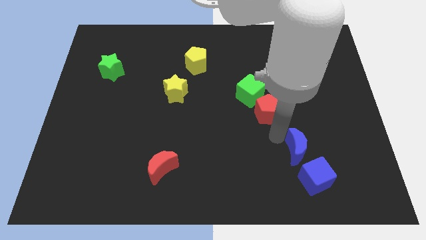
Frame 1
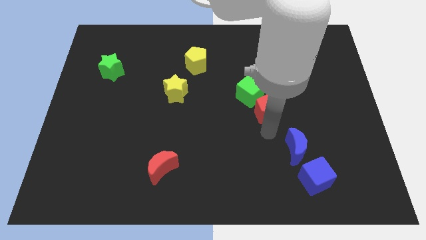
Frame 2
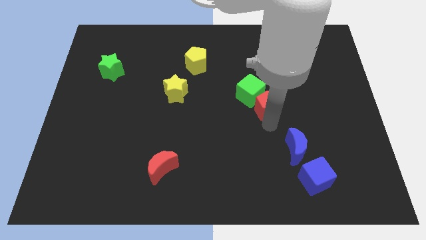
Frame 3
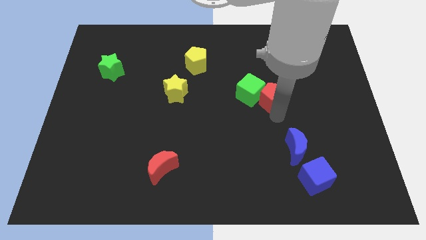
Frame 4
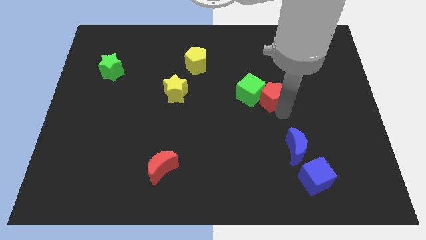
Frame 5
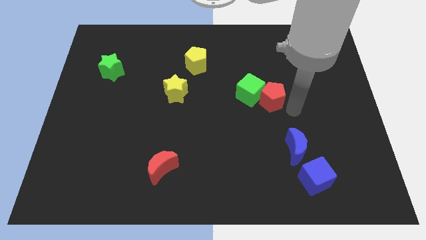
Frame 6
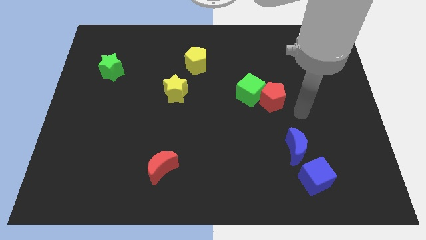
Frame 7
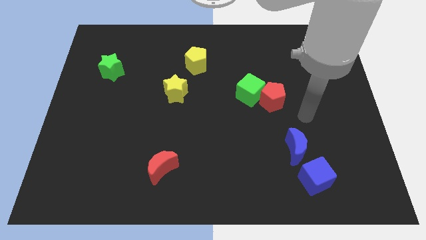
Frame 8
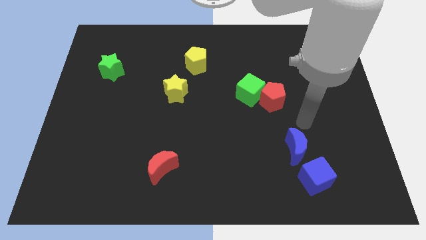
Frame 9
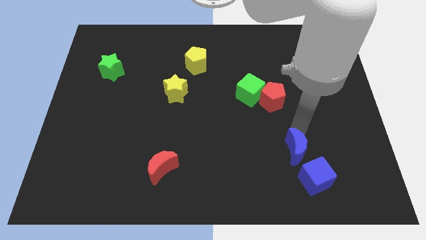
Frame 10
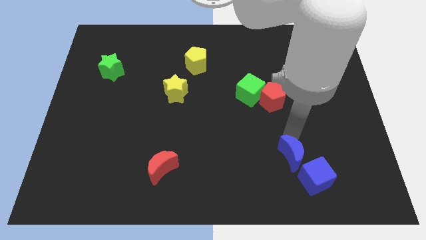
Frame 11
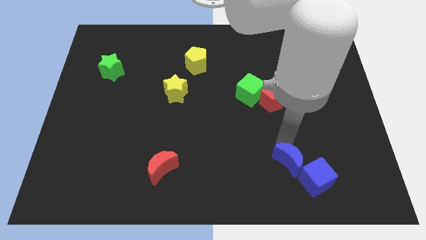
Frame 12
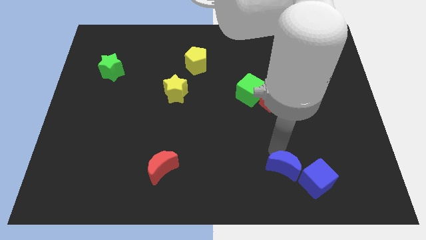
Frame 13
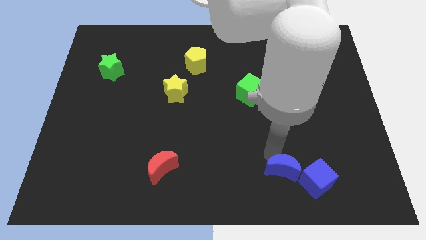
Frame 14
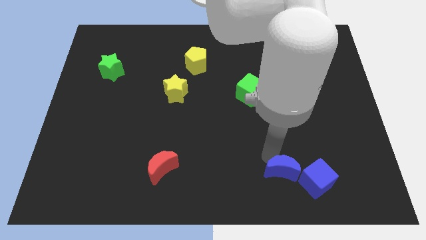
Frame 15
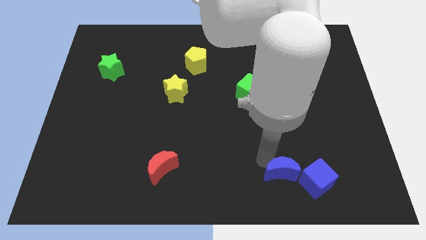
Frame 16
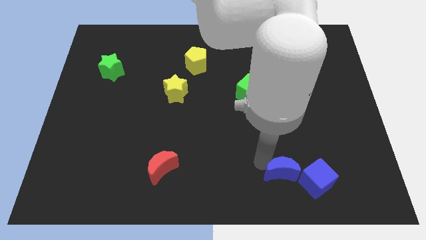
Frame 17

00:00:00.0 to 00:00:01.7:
push the blue crescent into the blue cube

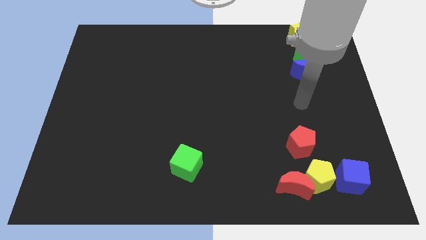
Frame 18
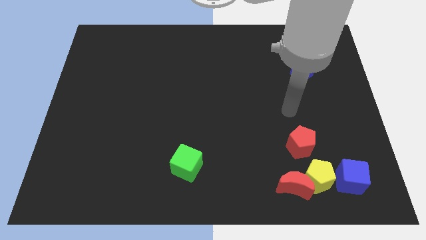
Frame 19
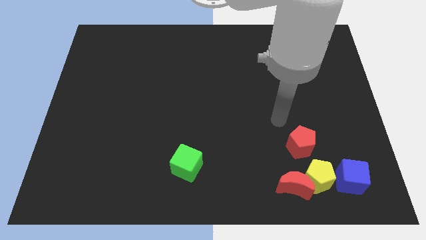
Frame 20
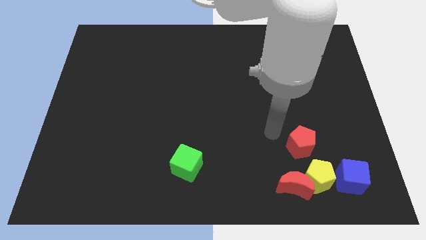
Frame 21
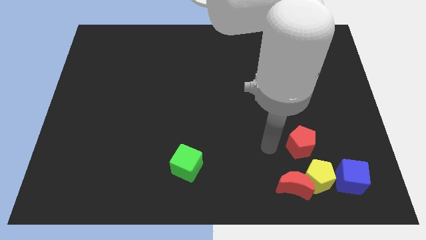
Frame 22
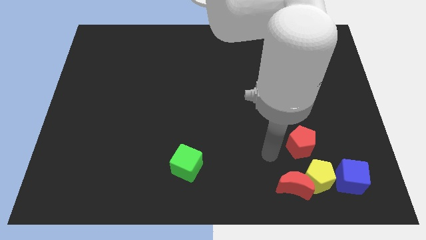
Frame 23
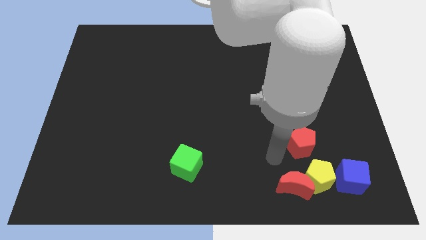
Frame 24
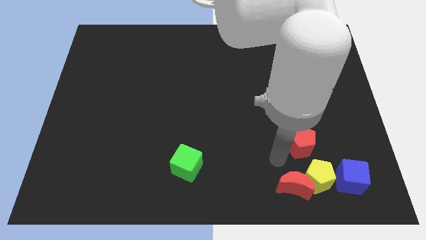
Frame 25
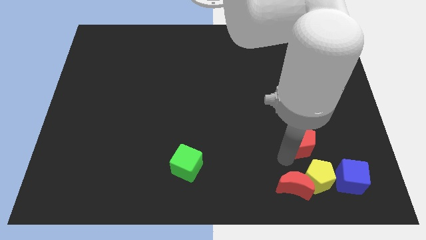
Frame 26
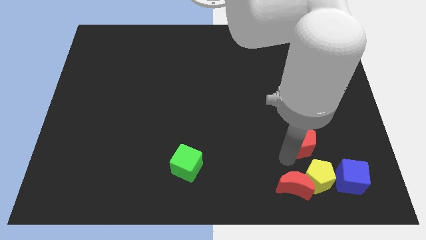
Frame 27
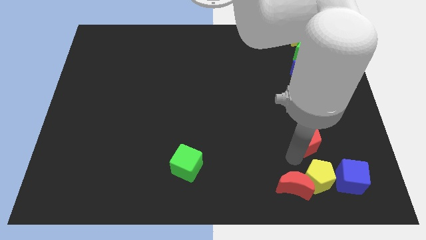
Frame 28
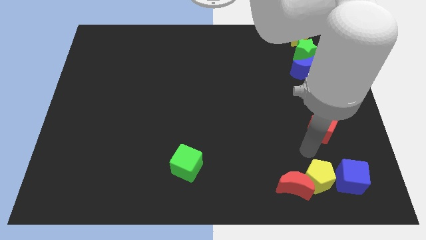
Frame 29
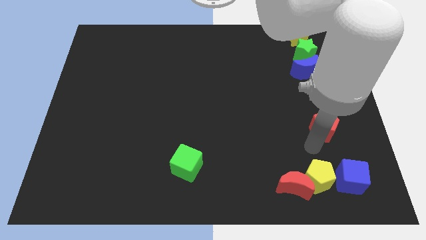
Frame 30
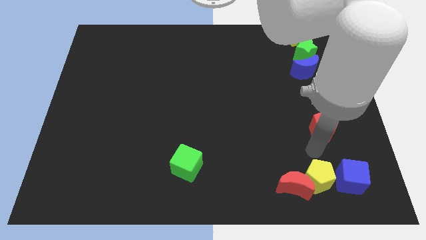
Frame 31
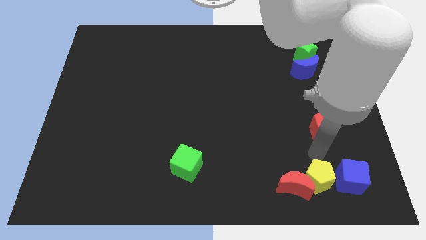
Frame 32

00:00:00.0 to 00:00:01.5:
move arm towards red pentagon

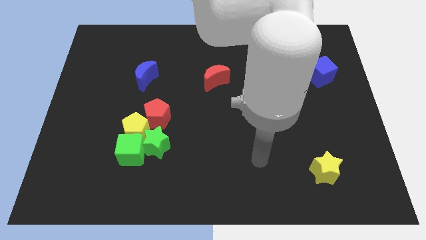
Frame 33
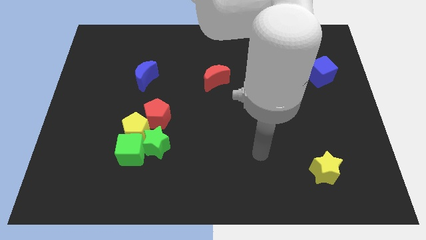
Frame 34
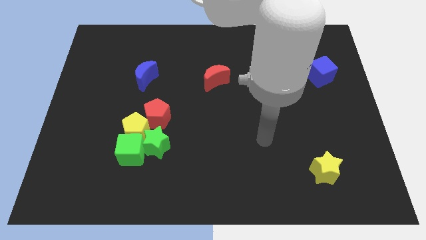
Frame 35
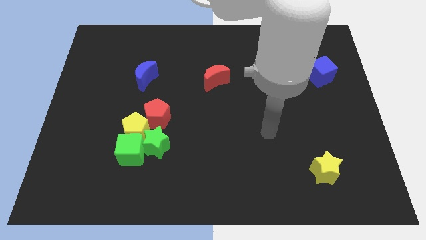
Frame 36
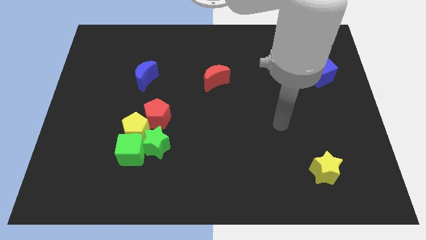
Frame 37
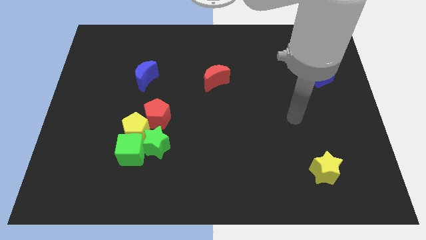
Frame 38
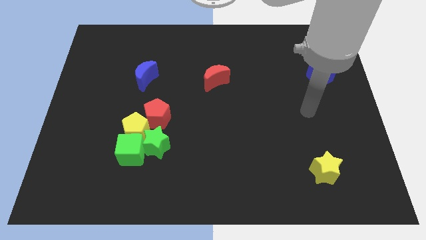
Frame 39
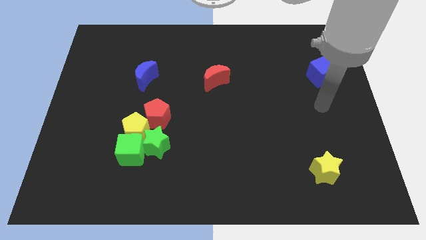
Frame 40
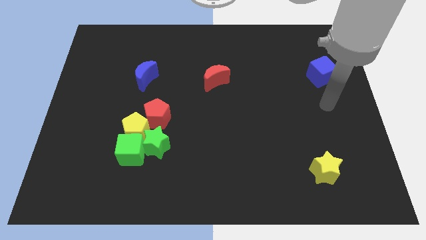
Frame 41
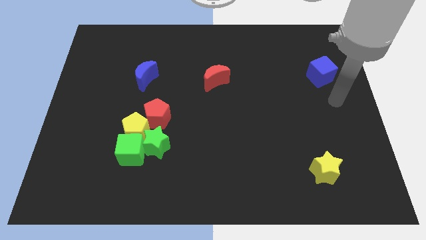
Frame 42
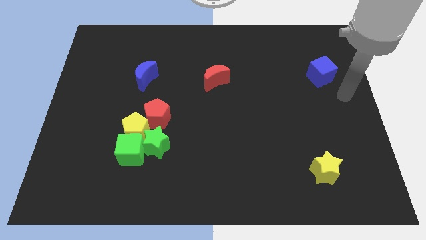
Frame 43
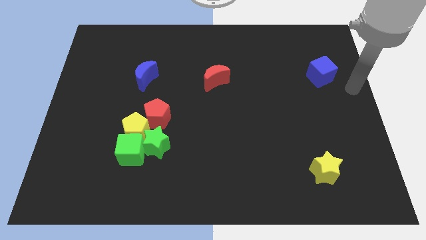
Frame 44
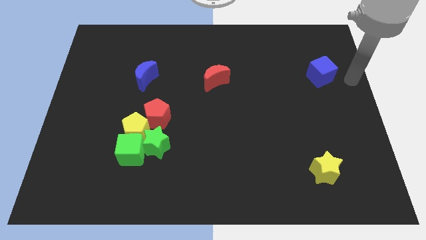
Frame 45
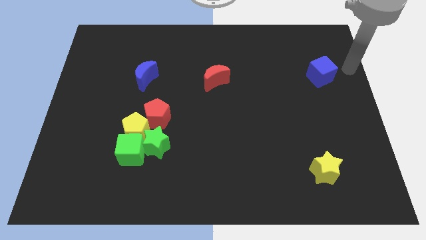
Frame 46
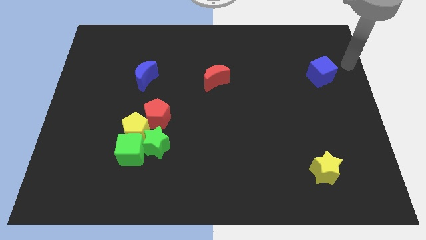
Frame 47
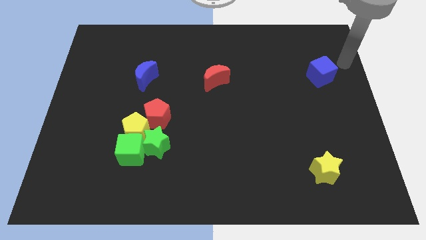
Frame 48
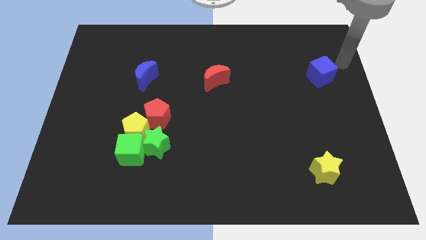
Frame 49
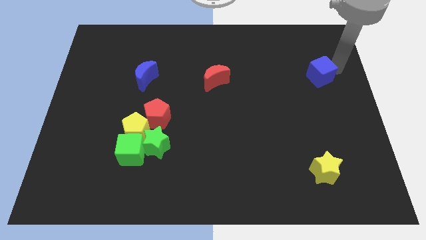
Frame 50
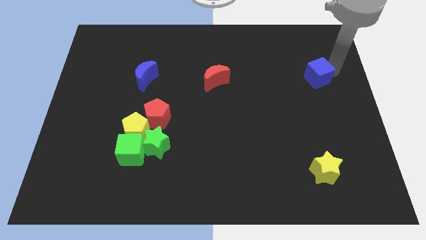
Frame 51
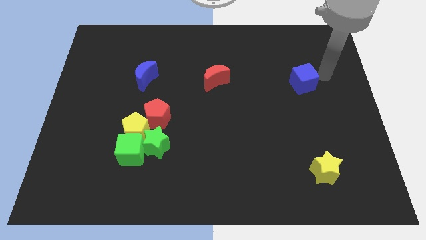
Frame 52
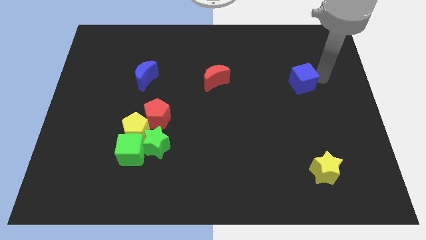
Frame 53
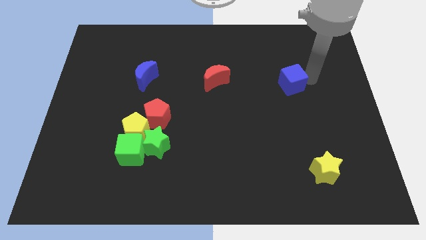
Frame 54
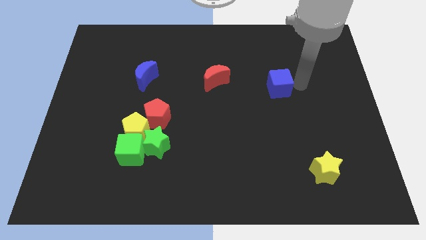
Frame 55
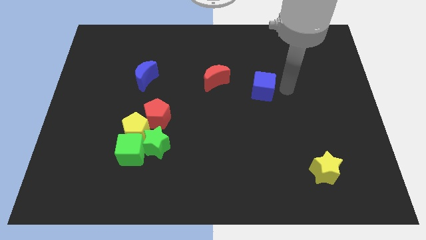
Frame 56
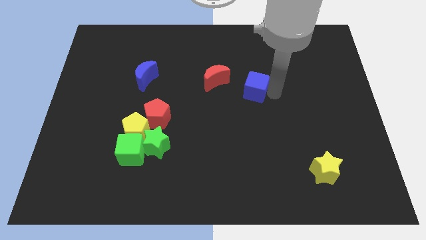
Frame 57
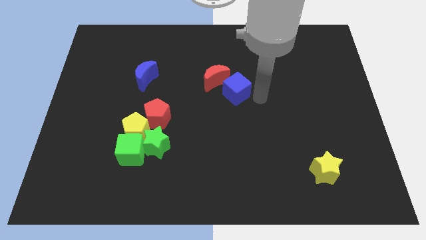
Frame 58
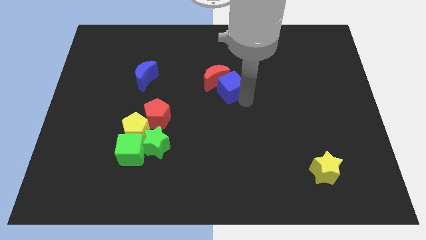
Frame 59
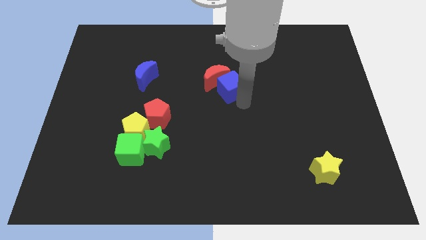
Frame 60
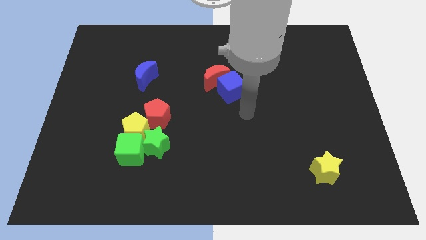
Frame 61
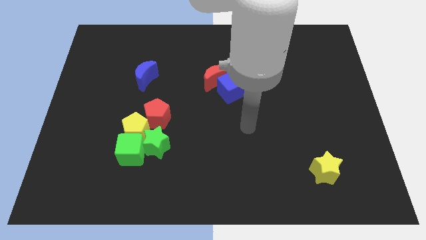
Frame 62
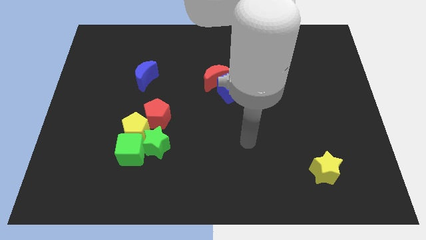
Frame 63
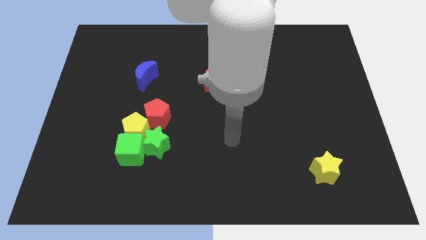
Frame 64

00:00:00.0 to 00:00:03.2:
move the blue cube to the bottom side of the red moon

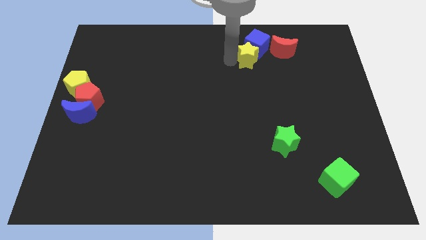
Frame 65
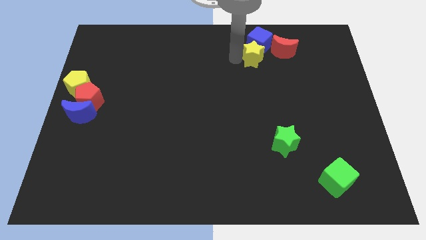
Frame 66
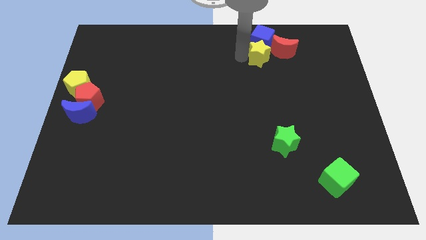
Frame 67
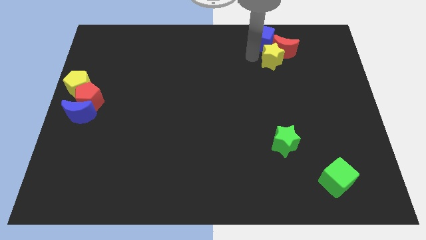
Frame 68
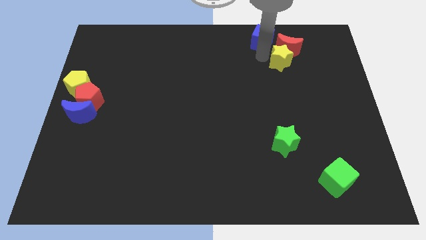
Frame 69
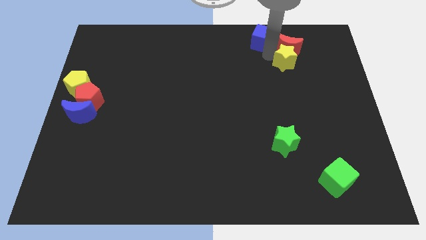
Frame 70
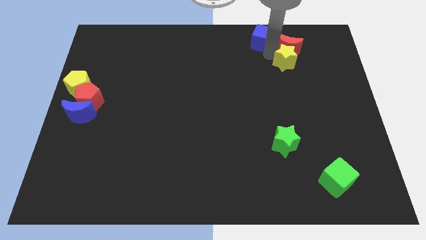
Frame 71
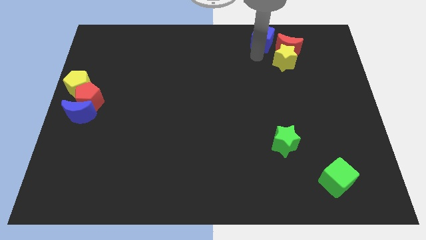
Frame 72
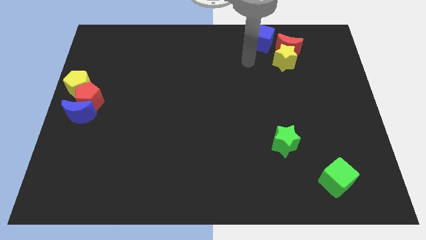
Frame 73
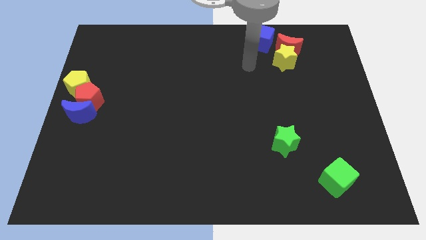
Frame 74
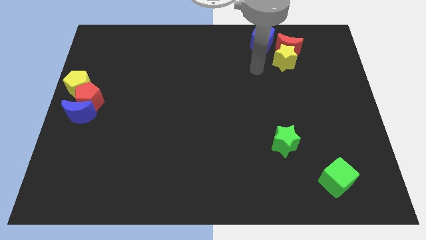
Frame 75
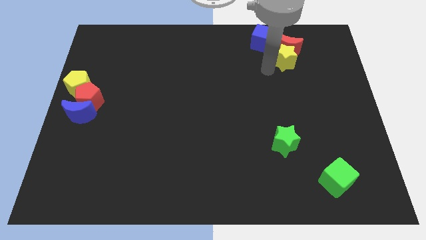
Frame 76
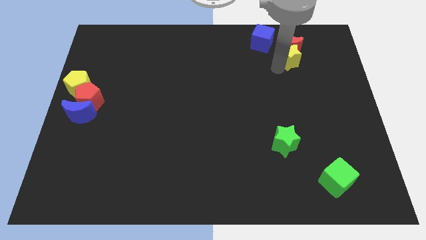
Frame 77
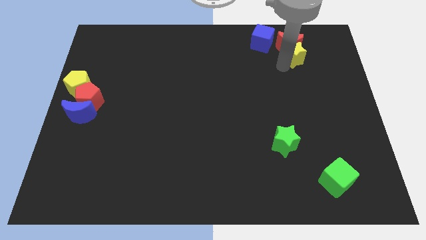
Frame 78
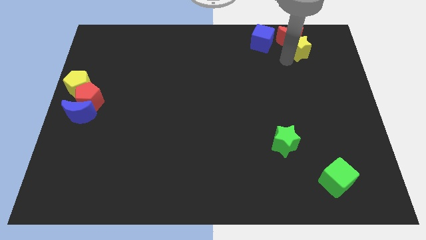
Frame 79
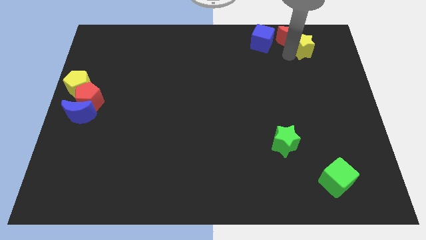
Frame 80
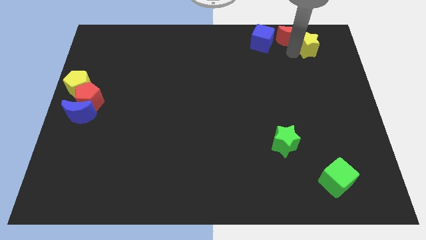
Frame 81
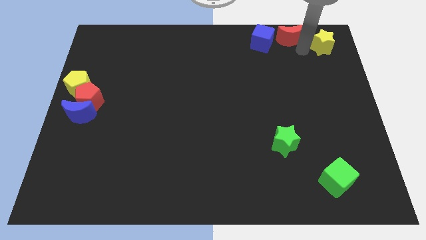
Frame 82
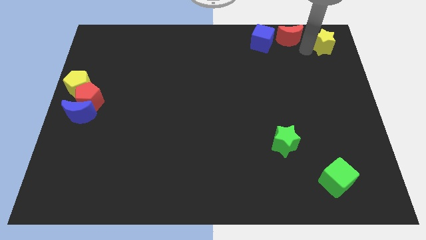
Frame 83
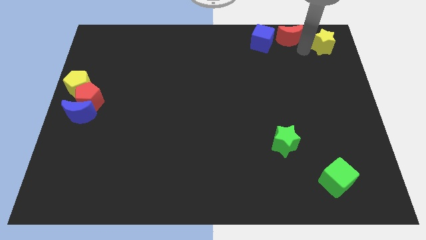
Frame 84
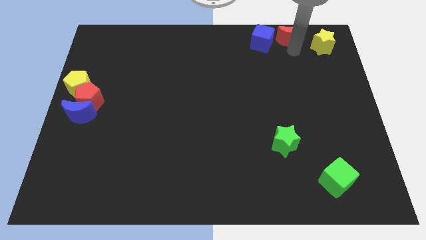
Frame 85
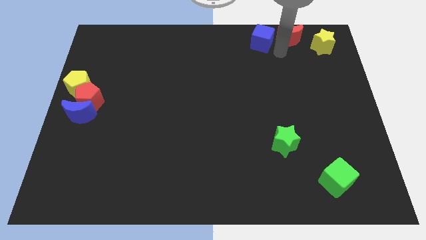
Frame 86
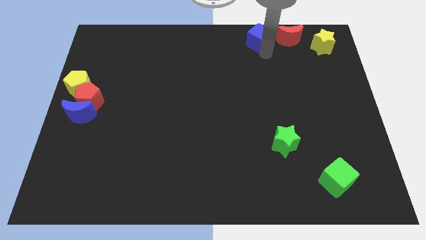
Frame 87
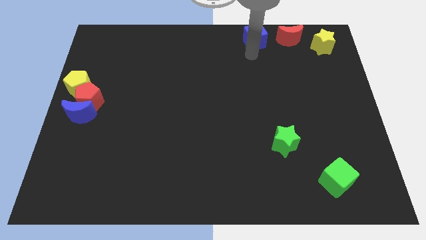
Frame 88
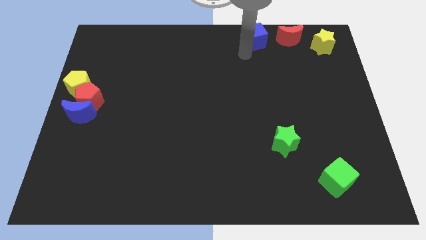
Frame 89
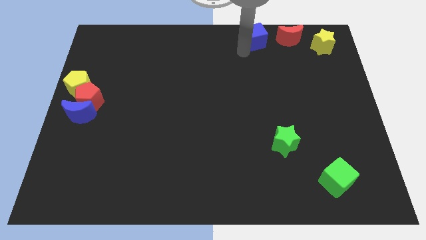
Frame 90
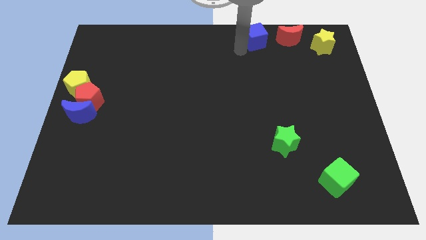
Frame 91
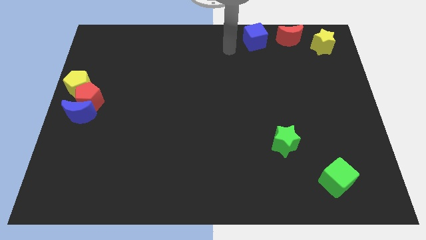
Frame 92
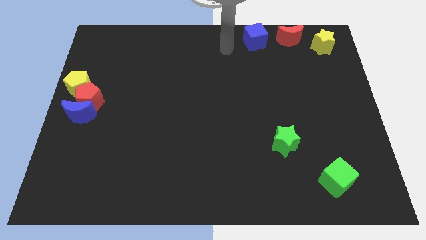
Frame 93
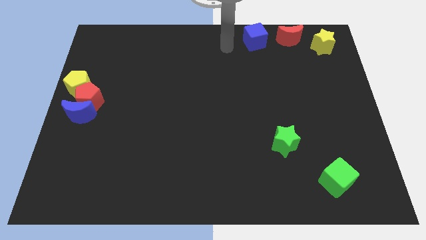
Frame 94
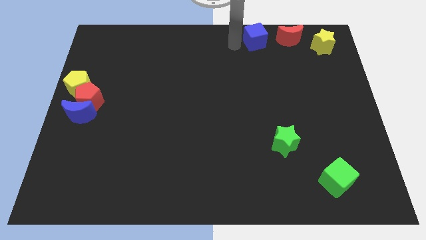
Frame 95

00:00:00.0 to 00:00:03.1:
move the yellow star parallel right to the red moon
